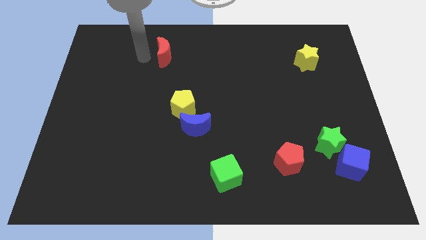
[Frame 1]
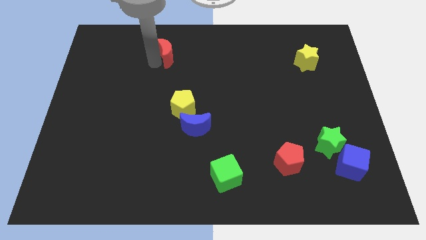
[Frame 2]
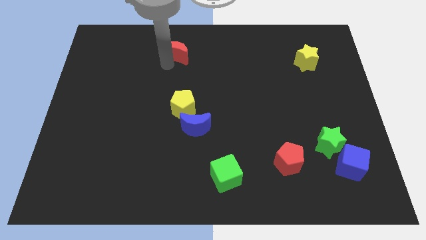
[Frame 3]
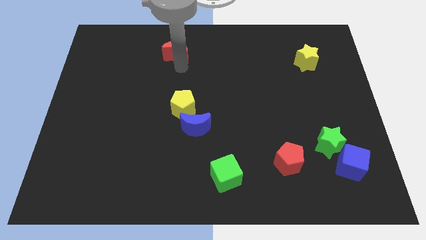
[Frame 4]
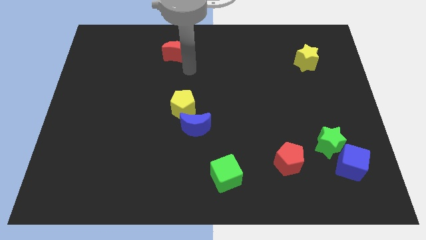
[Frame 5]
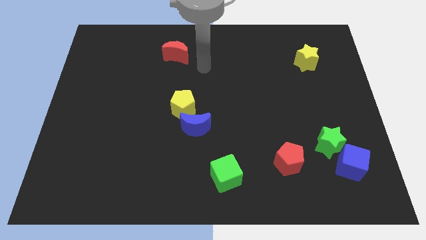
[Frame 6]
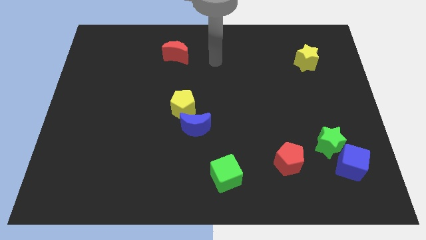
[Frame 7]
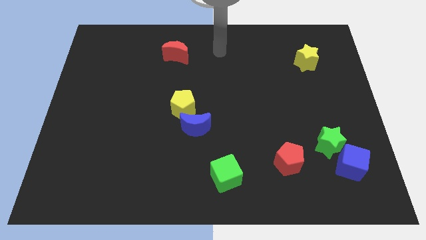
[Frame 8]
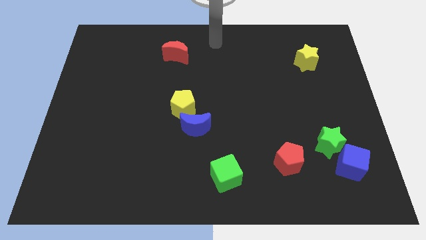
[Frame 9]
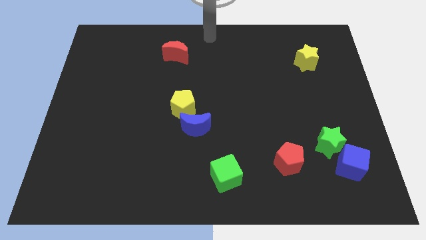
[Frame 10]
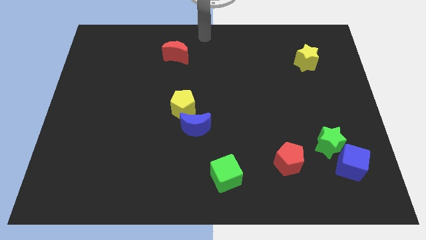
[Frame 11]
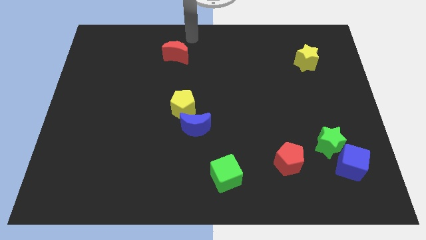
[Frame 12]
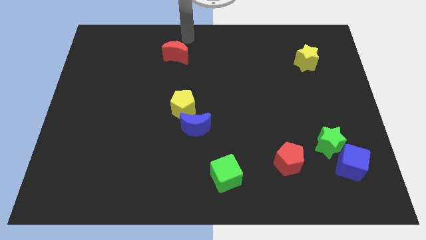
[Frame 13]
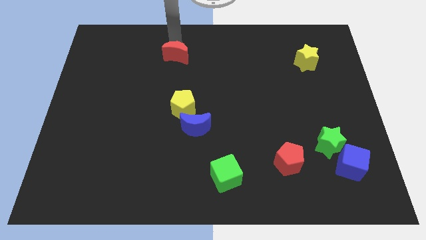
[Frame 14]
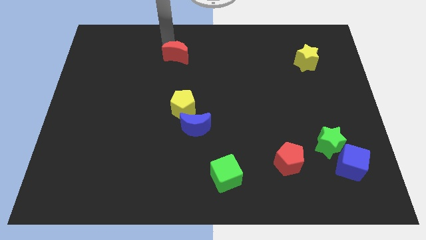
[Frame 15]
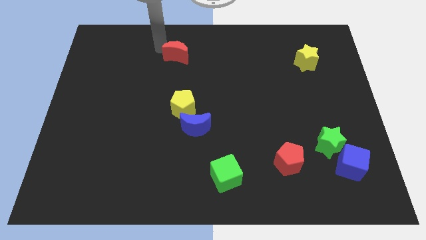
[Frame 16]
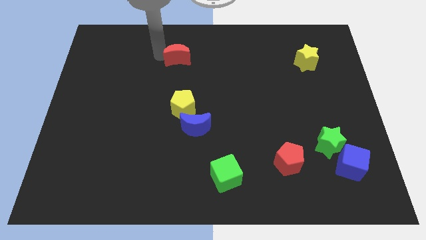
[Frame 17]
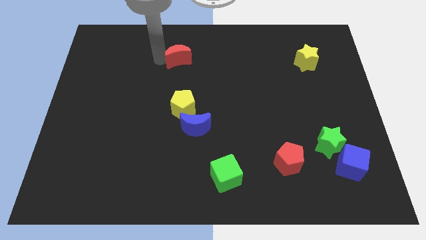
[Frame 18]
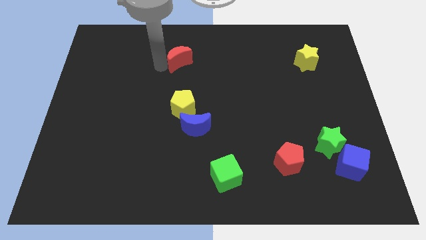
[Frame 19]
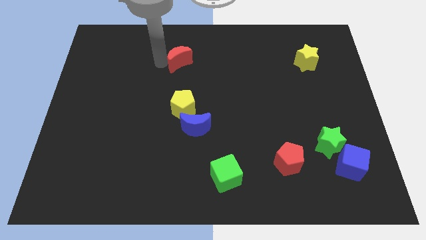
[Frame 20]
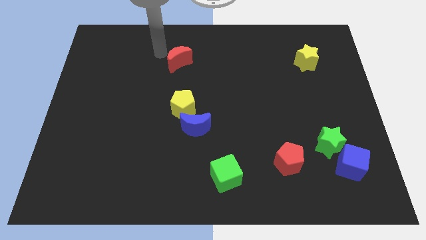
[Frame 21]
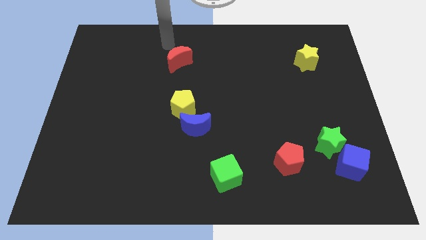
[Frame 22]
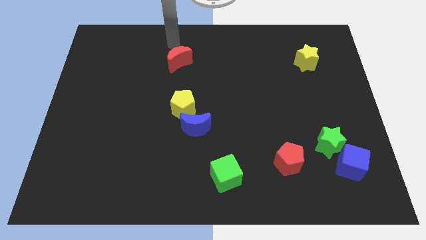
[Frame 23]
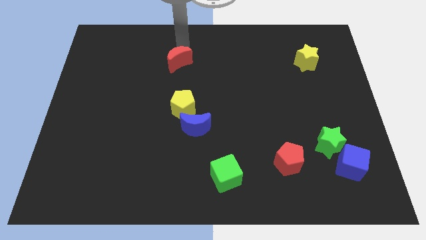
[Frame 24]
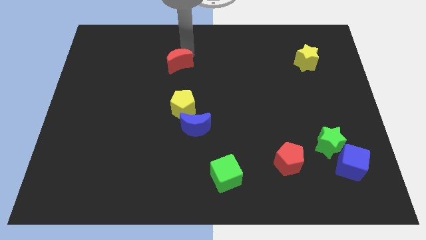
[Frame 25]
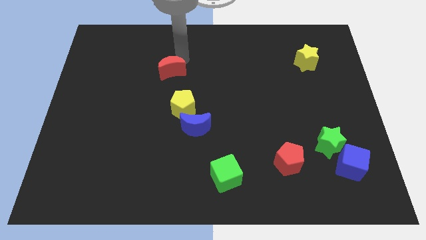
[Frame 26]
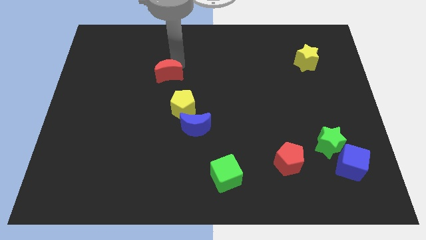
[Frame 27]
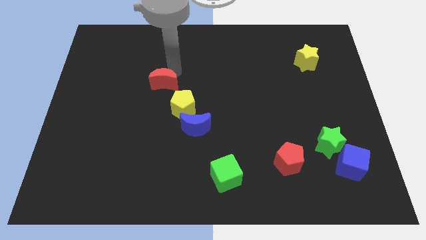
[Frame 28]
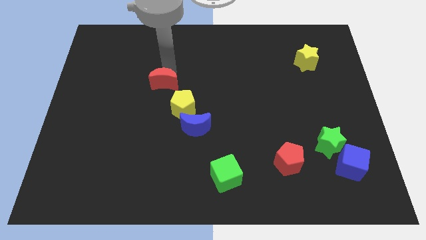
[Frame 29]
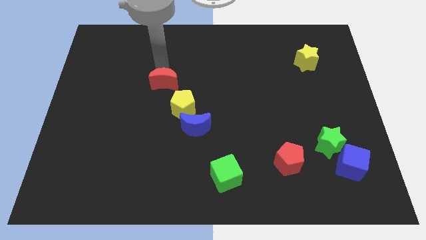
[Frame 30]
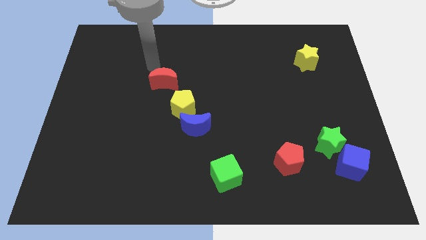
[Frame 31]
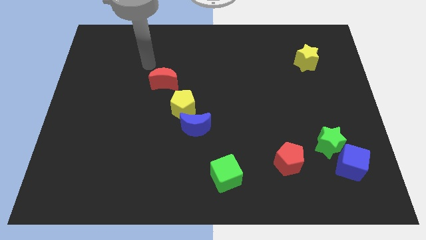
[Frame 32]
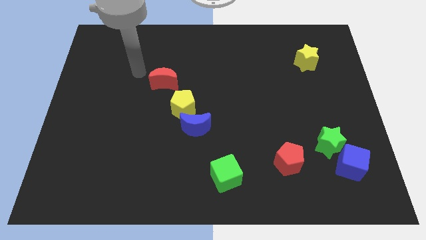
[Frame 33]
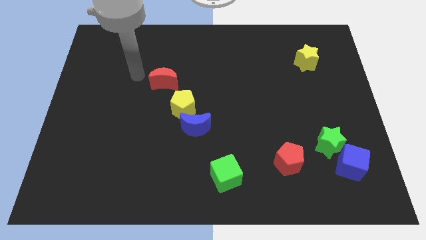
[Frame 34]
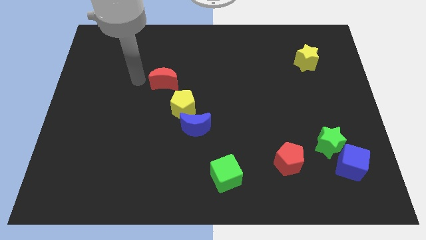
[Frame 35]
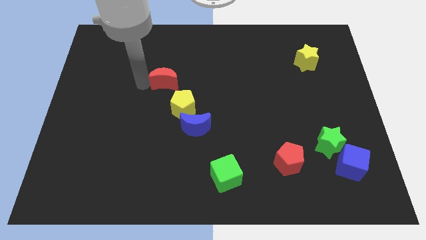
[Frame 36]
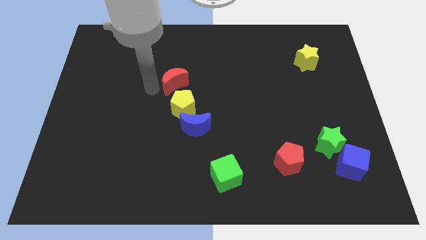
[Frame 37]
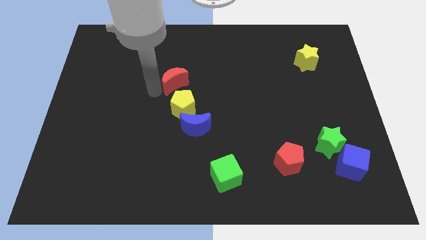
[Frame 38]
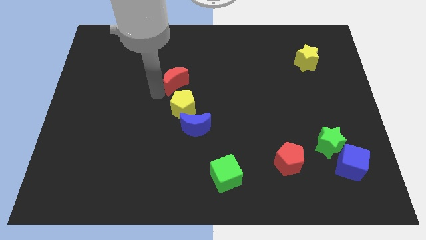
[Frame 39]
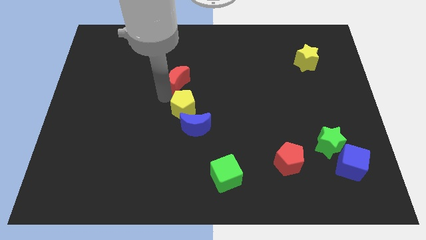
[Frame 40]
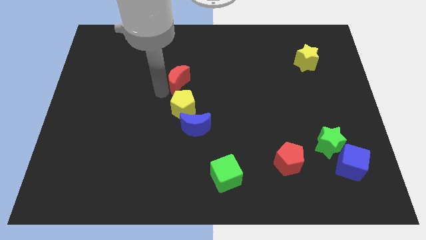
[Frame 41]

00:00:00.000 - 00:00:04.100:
place red moon above yellow pentagon

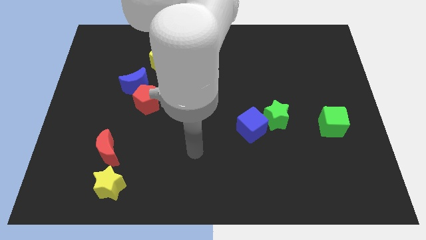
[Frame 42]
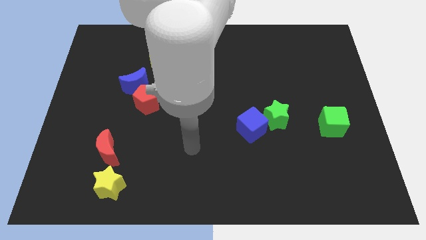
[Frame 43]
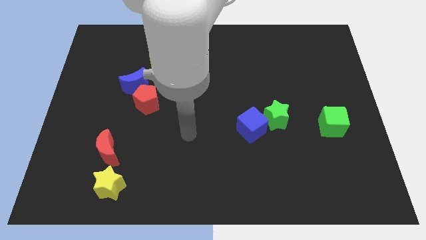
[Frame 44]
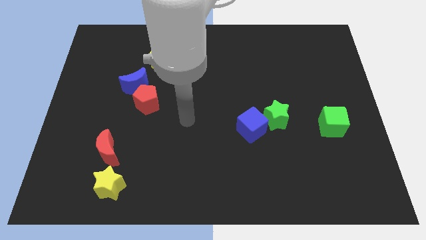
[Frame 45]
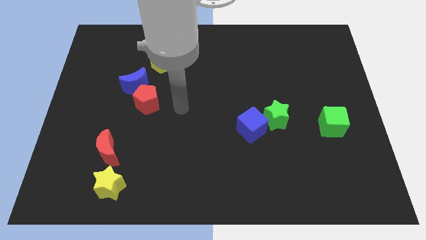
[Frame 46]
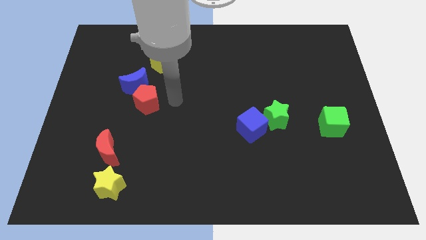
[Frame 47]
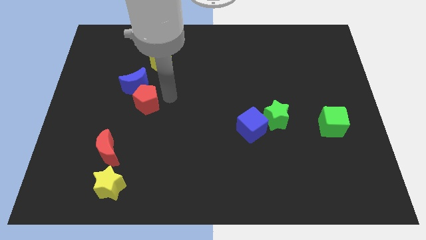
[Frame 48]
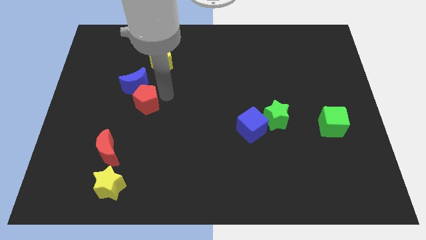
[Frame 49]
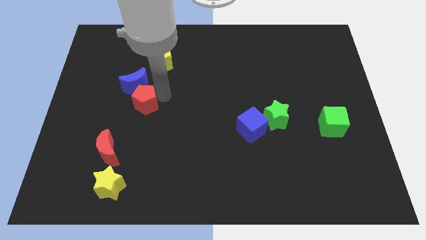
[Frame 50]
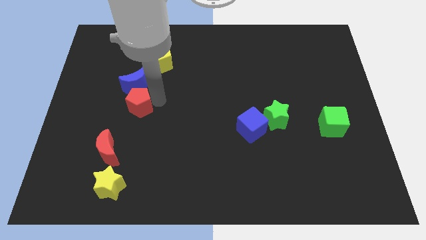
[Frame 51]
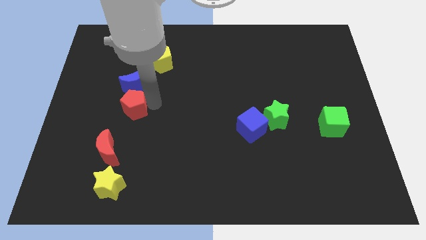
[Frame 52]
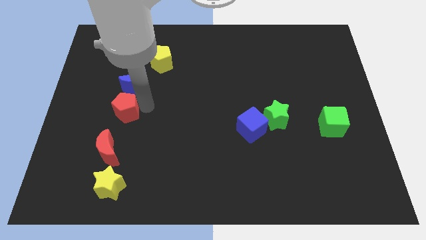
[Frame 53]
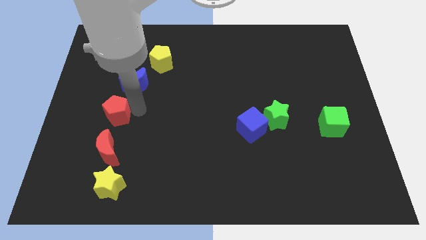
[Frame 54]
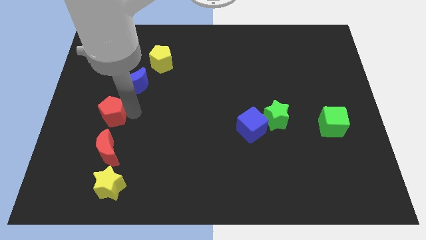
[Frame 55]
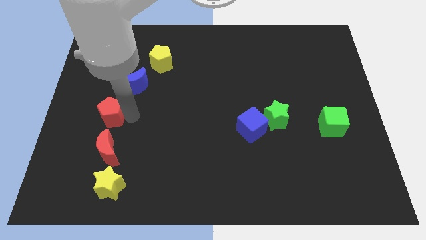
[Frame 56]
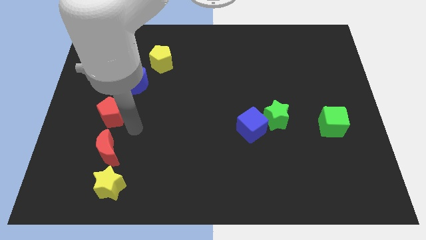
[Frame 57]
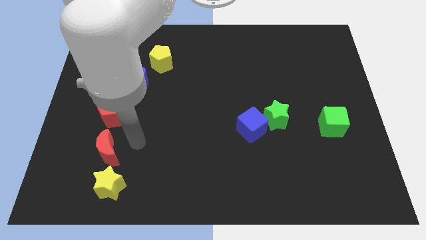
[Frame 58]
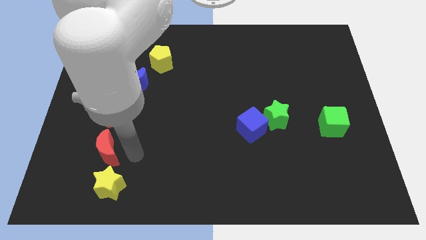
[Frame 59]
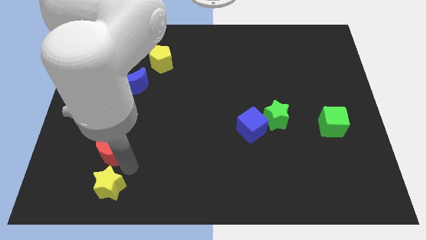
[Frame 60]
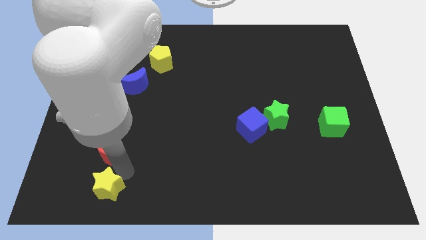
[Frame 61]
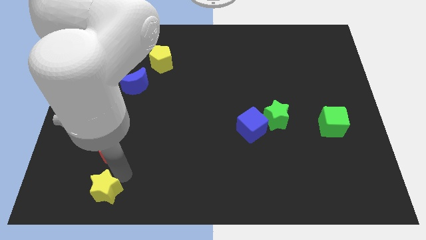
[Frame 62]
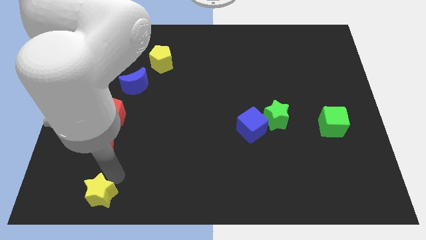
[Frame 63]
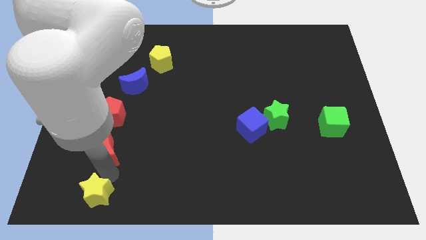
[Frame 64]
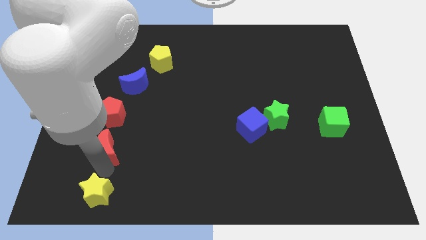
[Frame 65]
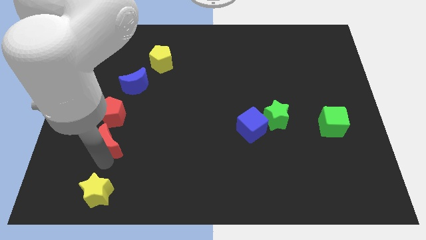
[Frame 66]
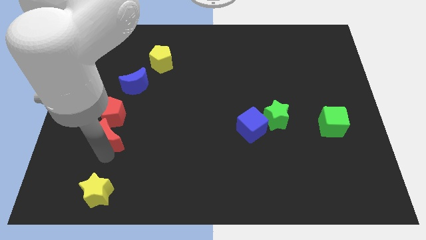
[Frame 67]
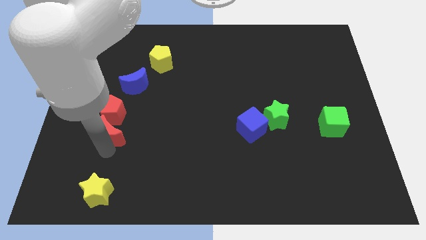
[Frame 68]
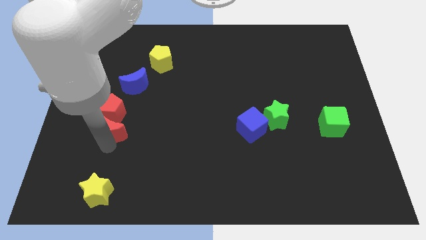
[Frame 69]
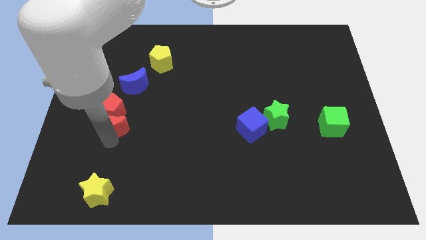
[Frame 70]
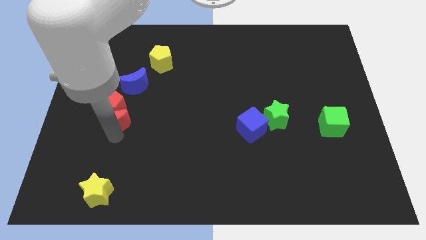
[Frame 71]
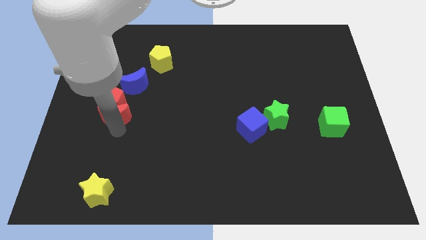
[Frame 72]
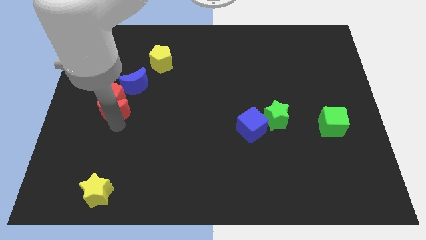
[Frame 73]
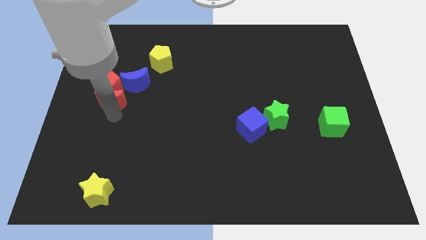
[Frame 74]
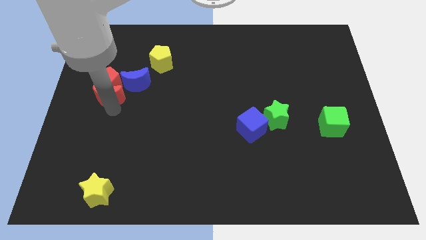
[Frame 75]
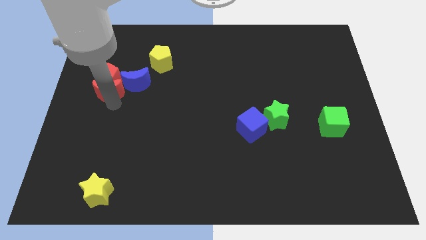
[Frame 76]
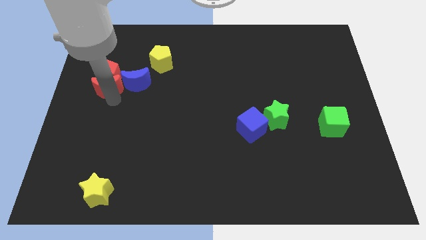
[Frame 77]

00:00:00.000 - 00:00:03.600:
move the red pentagon and the yellow star towards the top

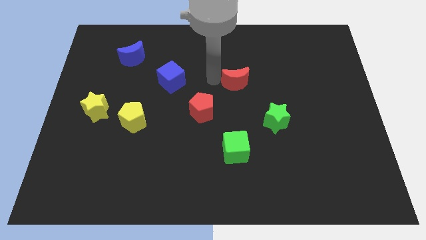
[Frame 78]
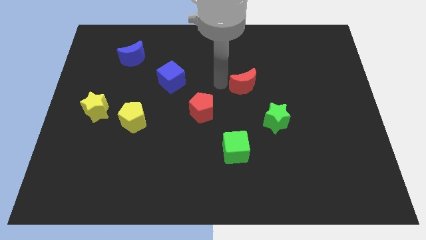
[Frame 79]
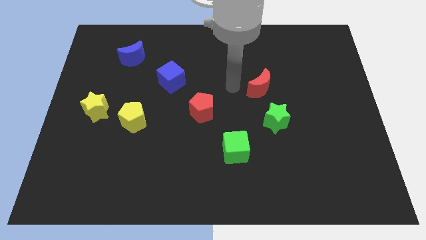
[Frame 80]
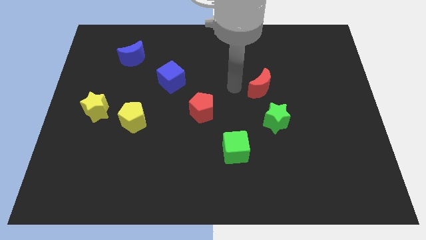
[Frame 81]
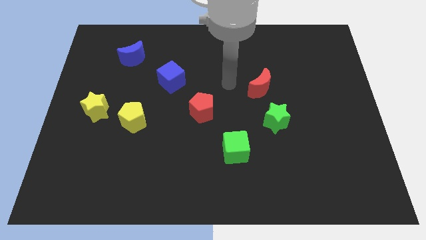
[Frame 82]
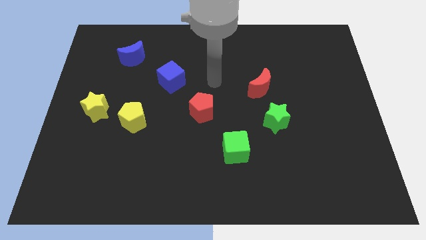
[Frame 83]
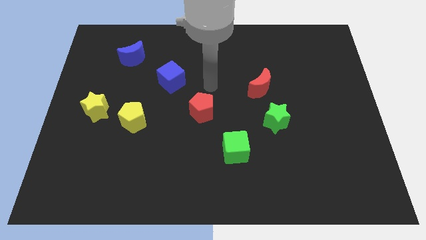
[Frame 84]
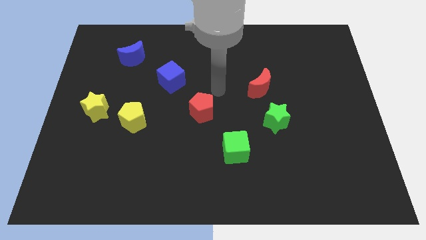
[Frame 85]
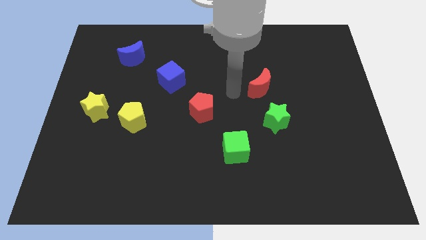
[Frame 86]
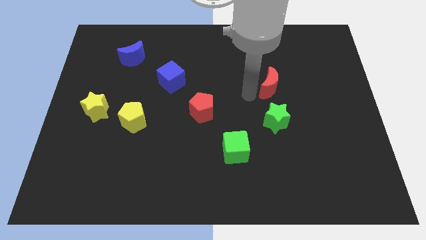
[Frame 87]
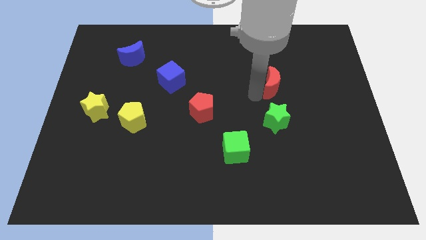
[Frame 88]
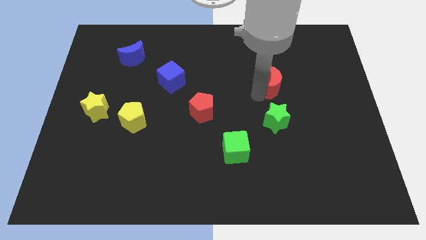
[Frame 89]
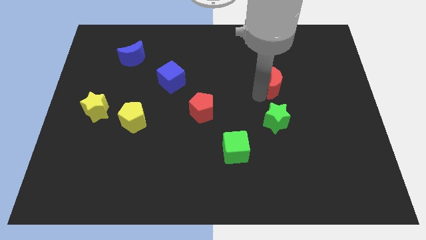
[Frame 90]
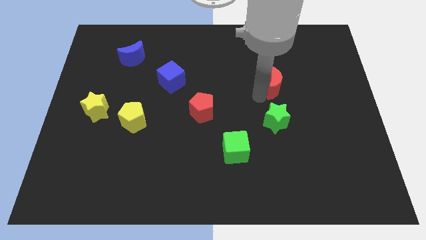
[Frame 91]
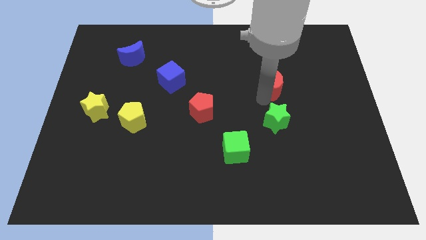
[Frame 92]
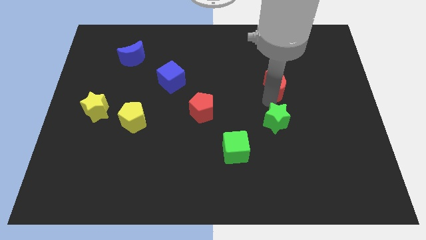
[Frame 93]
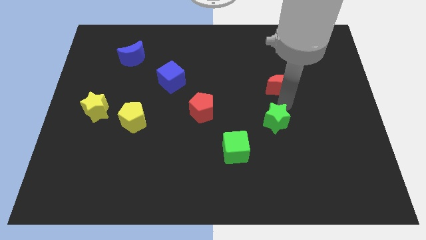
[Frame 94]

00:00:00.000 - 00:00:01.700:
place the red crescent above the top side of the green star
